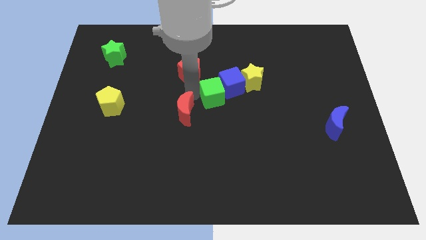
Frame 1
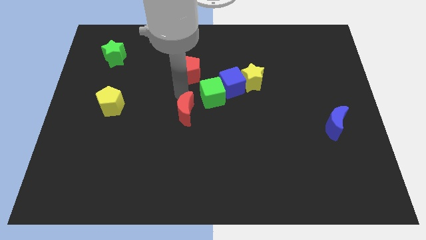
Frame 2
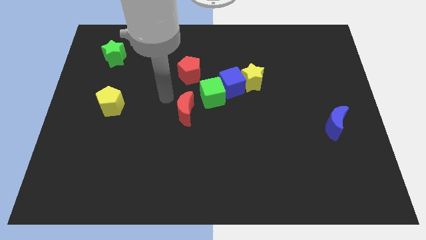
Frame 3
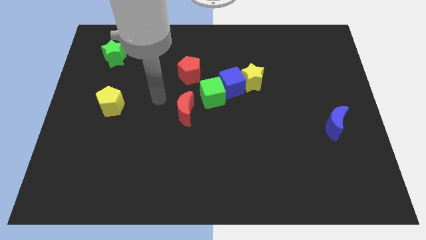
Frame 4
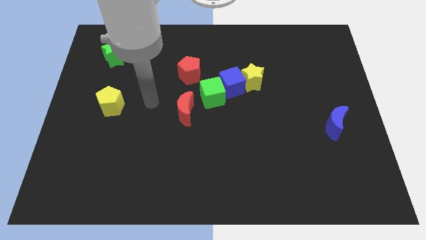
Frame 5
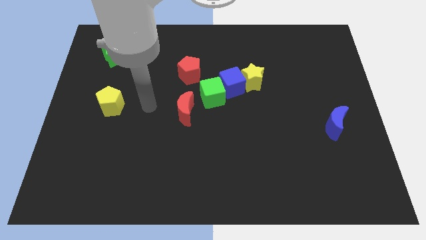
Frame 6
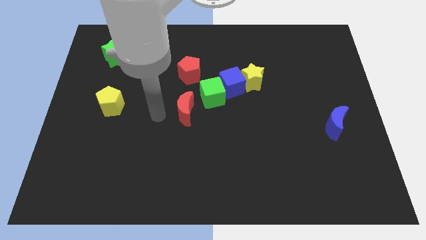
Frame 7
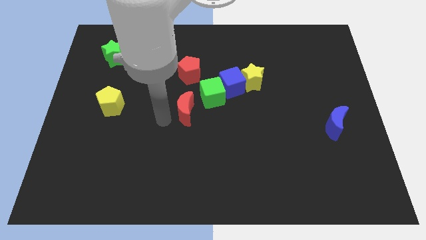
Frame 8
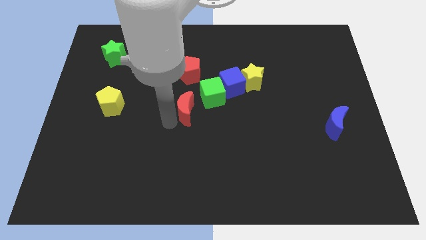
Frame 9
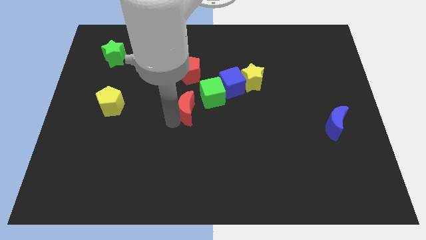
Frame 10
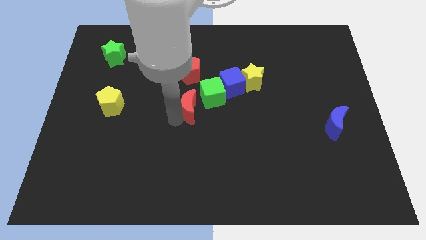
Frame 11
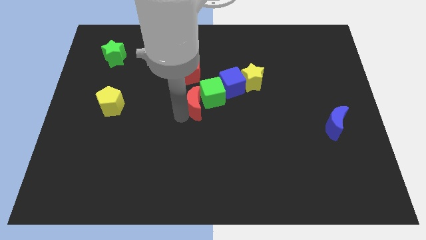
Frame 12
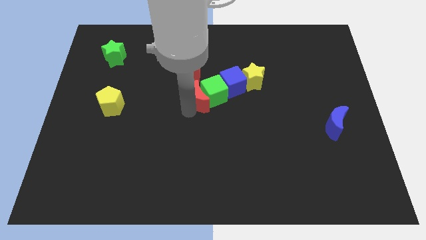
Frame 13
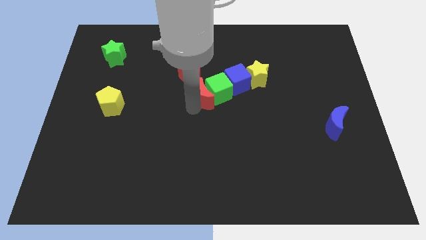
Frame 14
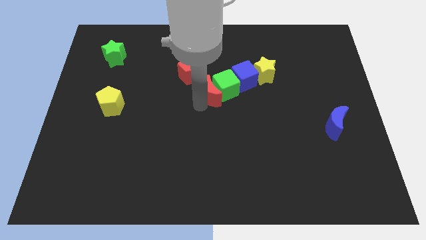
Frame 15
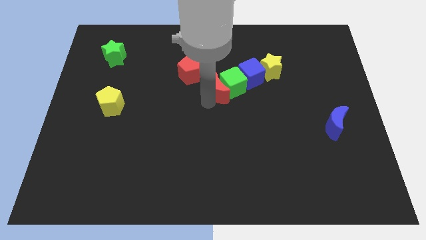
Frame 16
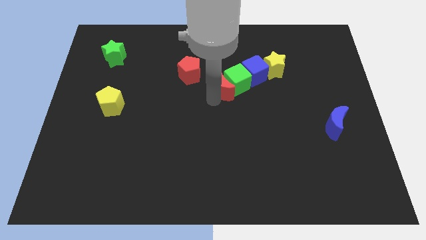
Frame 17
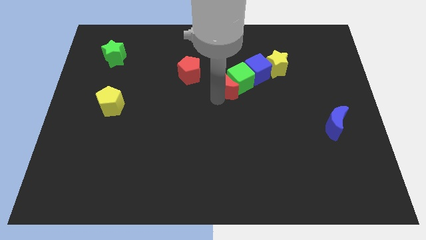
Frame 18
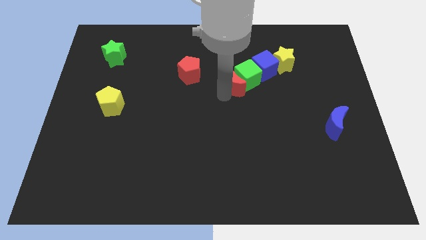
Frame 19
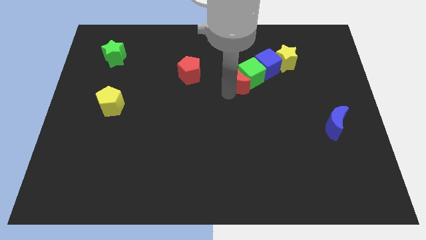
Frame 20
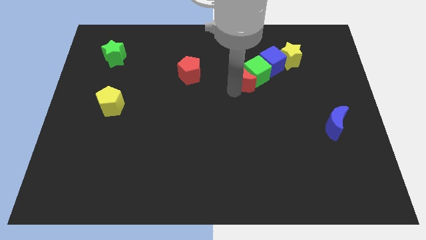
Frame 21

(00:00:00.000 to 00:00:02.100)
push the group of four blocks towards the top right

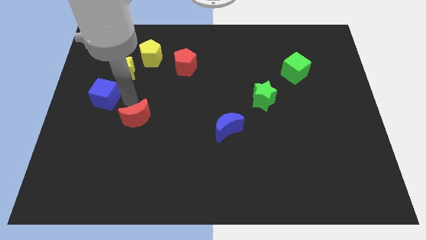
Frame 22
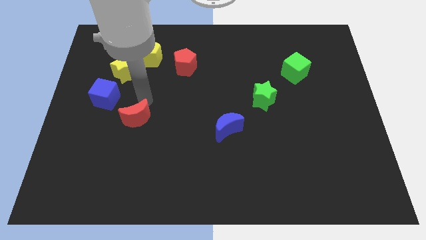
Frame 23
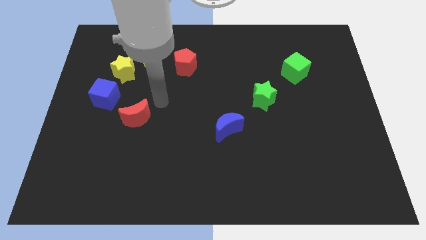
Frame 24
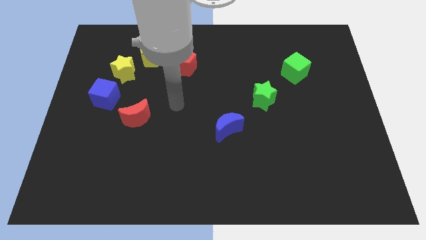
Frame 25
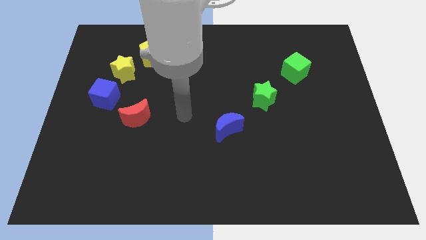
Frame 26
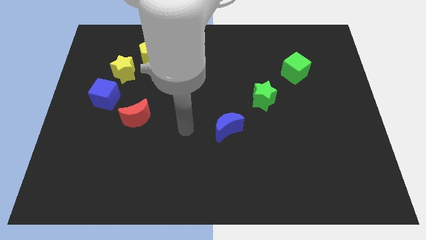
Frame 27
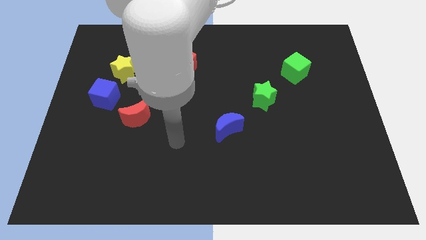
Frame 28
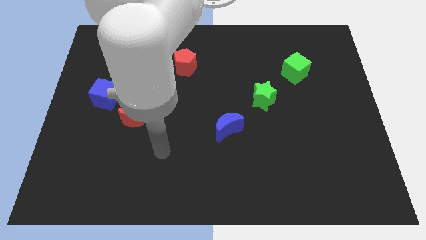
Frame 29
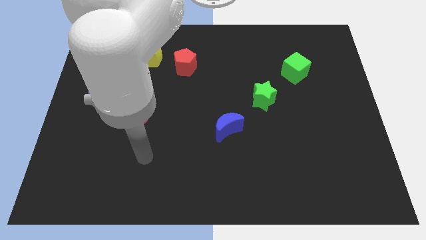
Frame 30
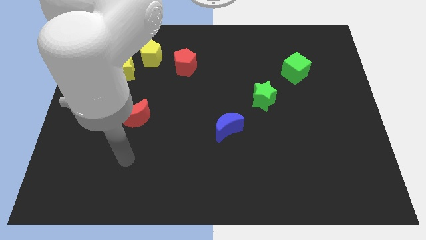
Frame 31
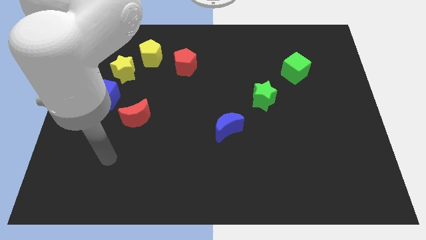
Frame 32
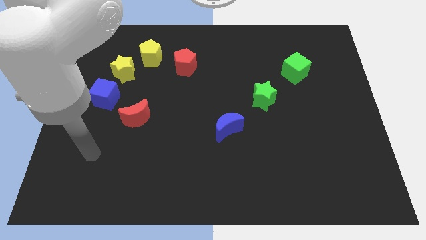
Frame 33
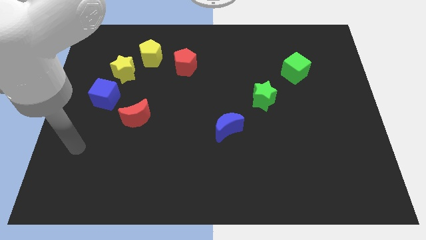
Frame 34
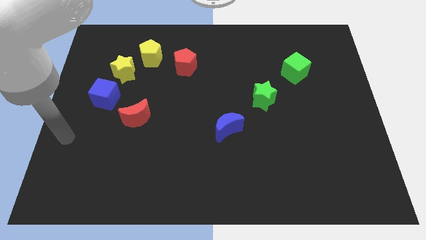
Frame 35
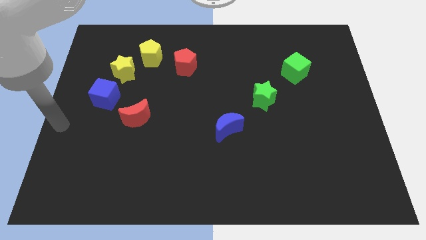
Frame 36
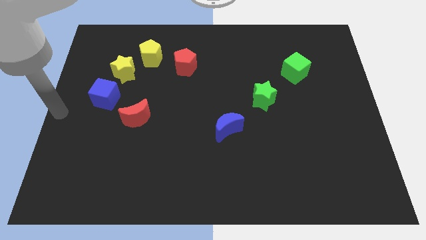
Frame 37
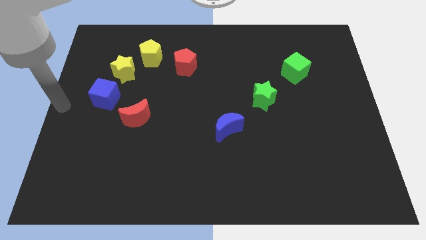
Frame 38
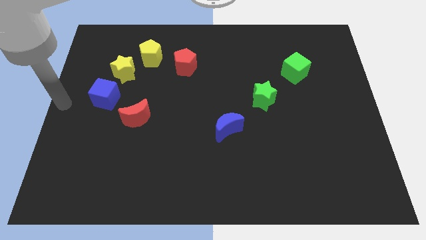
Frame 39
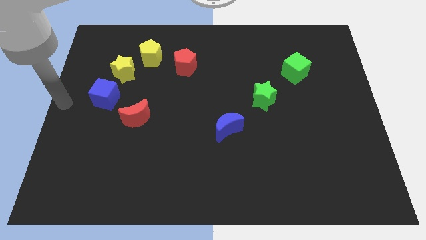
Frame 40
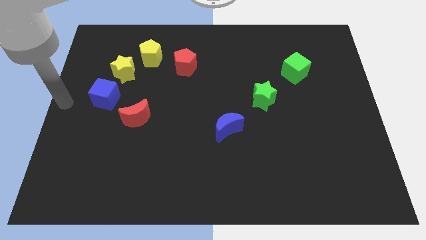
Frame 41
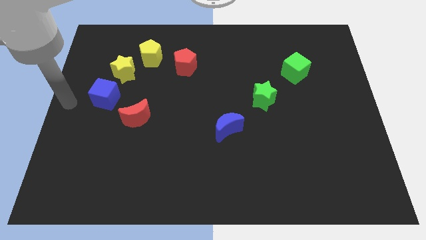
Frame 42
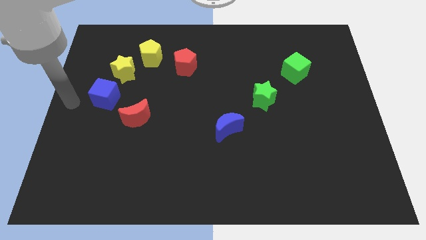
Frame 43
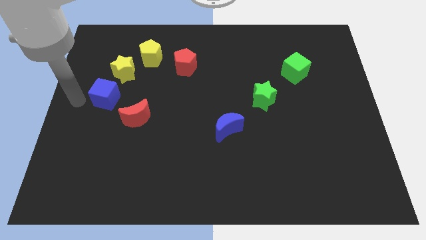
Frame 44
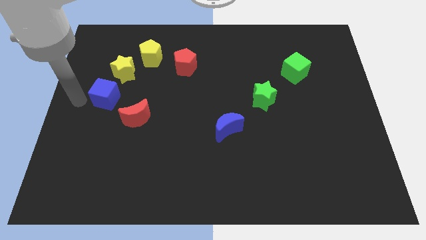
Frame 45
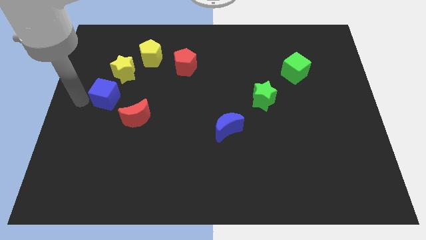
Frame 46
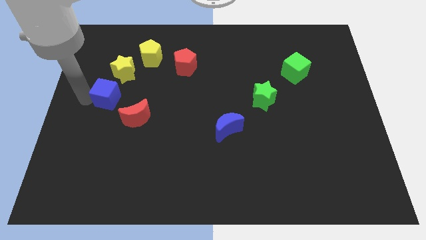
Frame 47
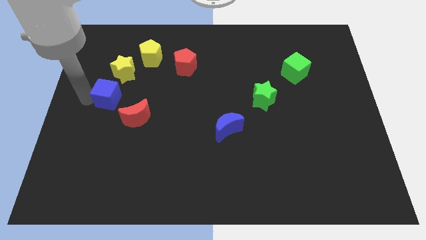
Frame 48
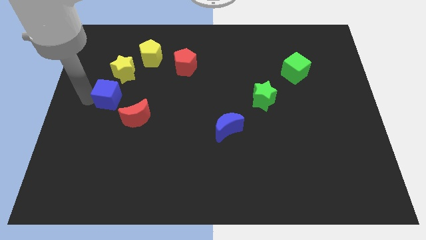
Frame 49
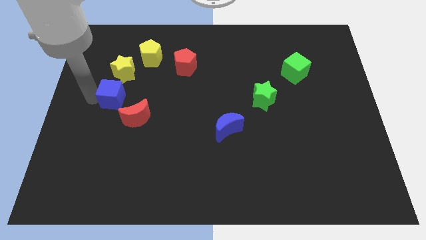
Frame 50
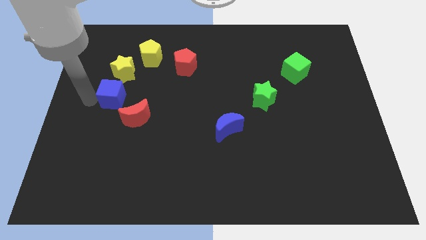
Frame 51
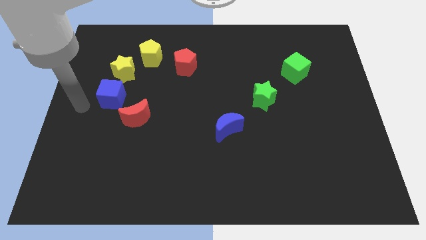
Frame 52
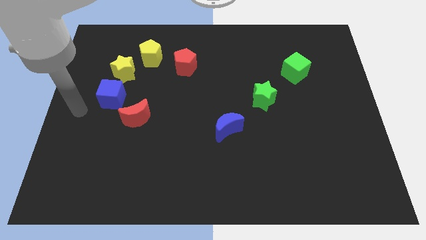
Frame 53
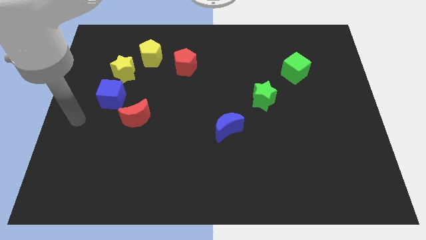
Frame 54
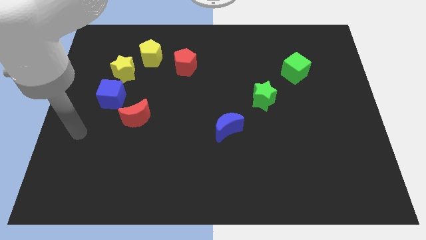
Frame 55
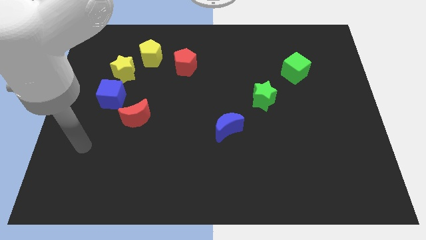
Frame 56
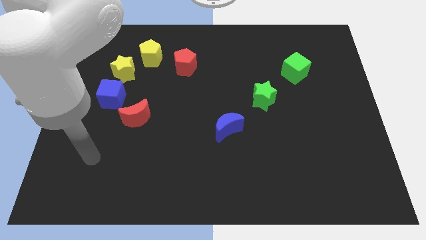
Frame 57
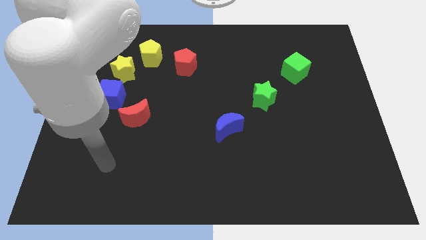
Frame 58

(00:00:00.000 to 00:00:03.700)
slide the blue cube slightly to the right

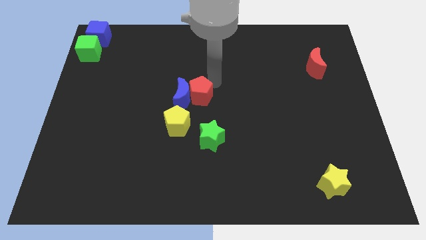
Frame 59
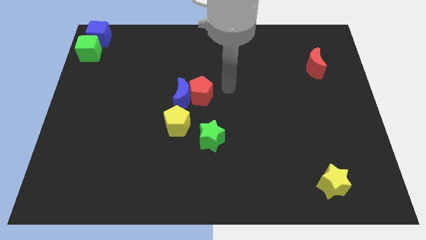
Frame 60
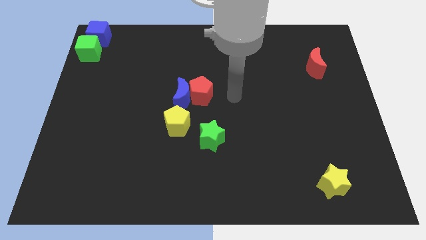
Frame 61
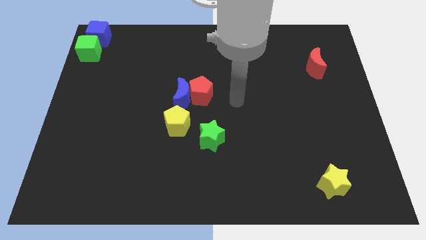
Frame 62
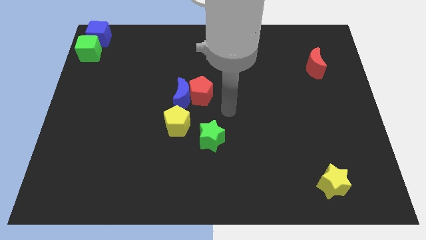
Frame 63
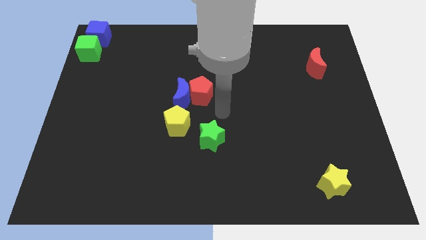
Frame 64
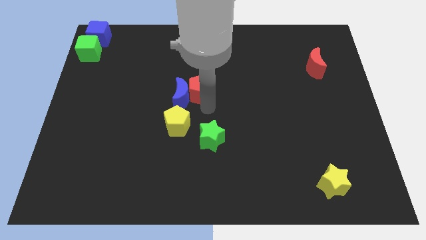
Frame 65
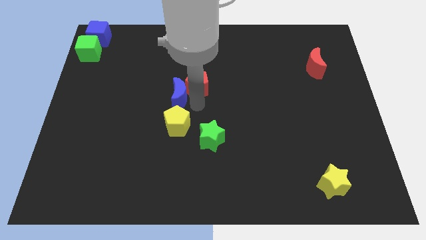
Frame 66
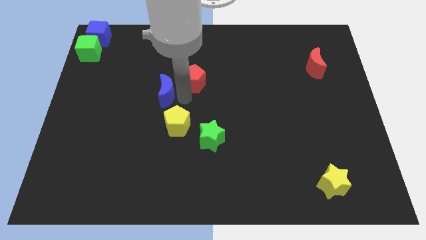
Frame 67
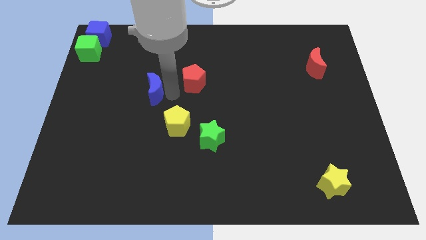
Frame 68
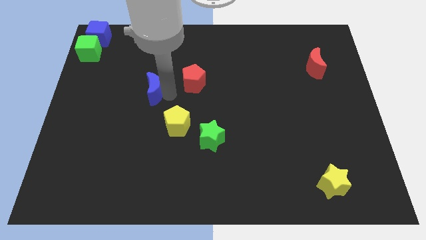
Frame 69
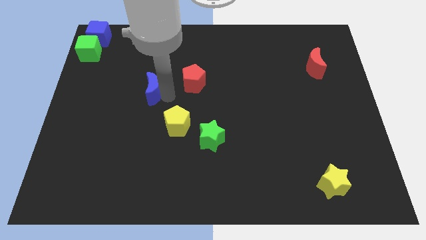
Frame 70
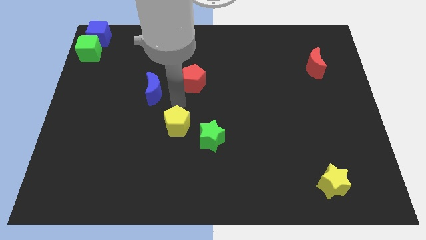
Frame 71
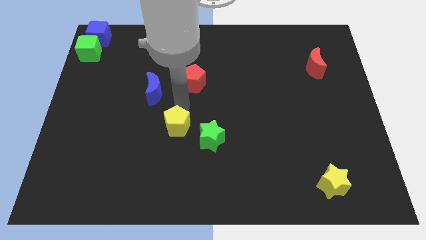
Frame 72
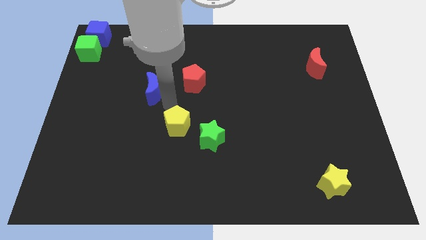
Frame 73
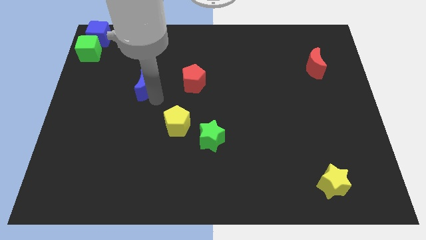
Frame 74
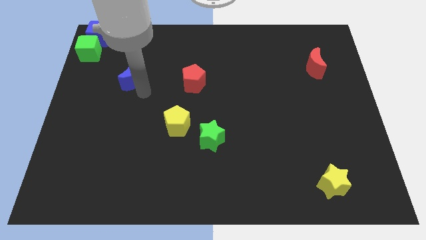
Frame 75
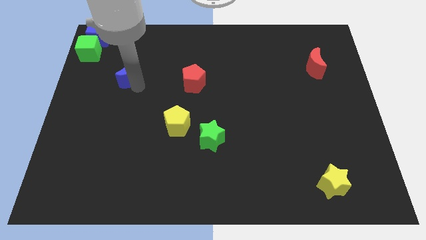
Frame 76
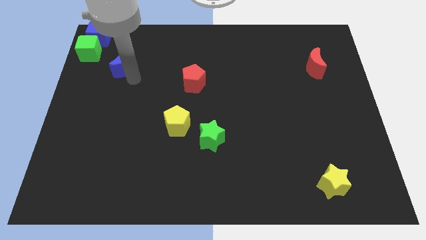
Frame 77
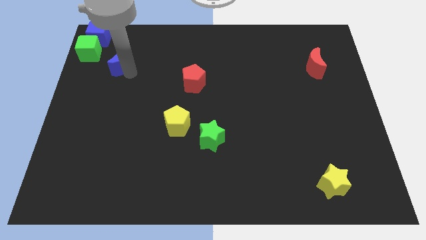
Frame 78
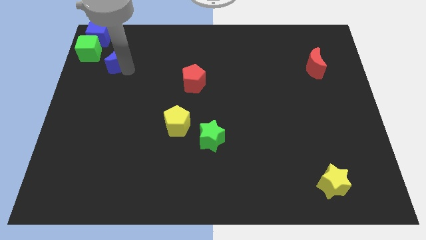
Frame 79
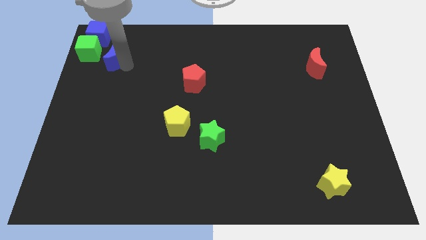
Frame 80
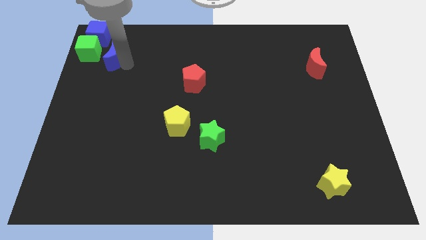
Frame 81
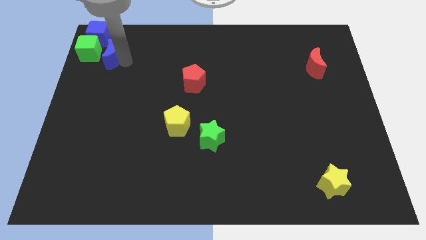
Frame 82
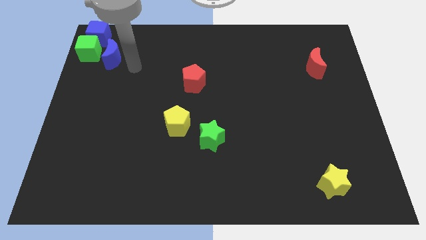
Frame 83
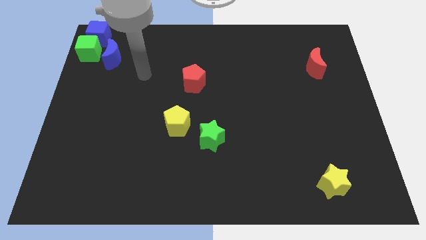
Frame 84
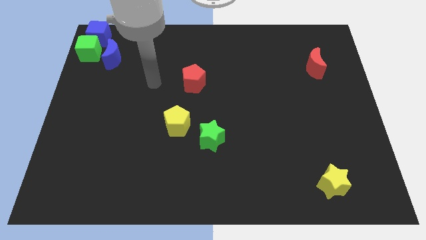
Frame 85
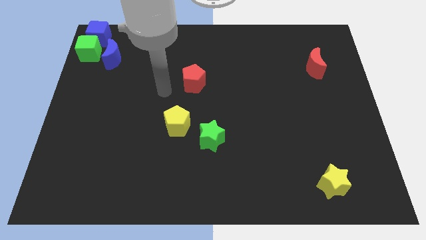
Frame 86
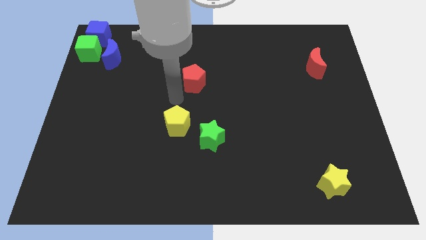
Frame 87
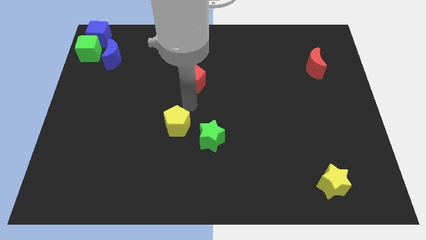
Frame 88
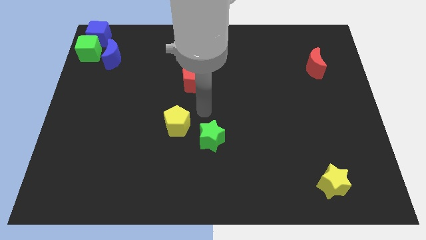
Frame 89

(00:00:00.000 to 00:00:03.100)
separate blue moon from red pentagon
